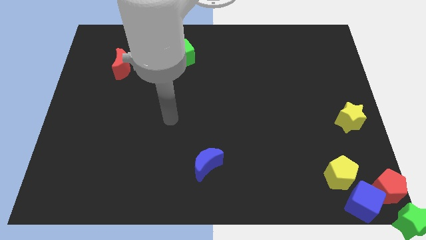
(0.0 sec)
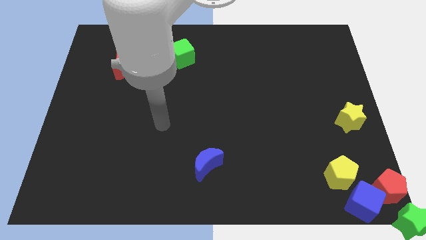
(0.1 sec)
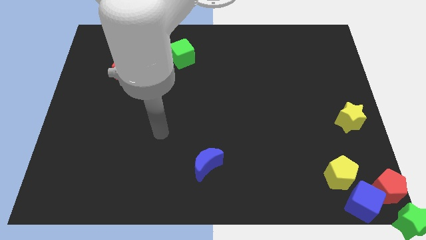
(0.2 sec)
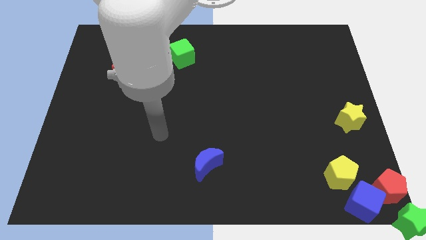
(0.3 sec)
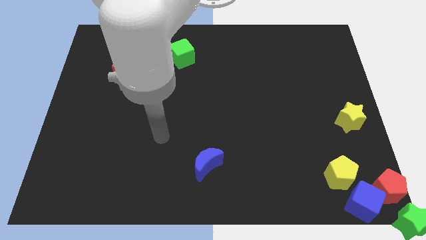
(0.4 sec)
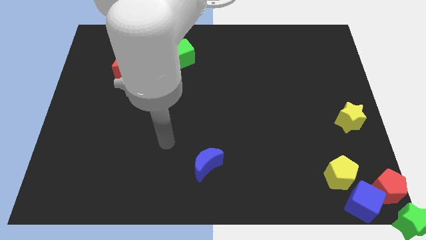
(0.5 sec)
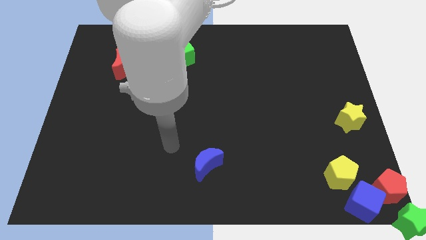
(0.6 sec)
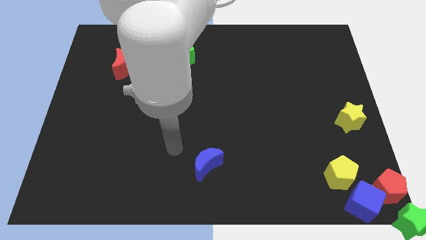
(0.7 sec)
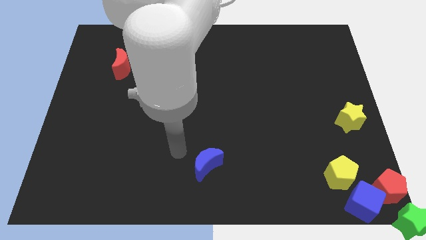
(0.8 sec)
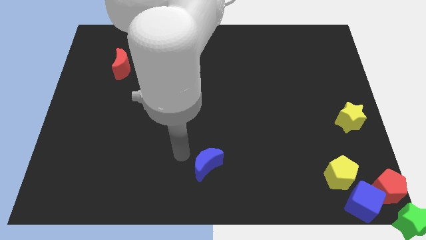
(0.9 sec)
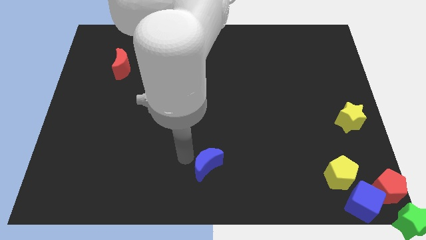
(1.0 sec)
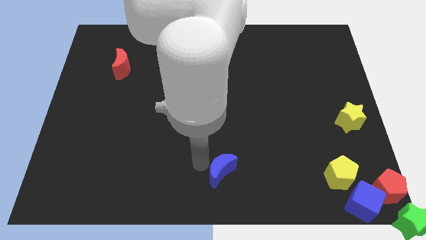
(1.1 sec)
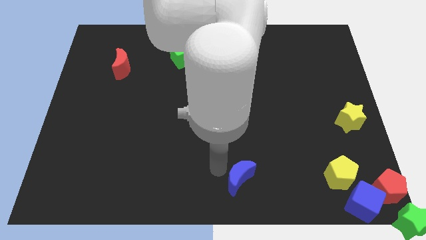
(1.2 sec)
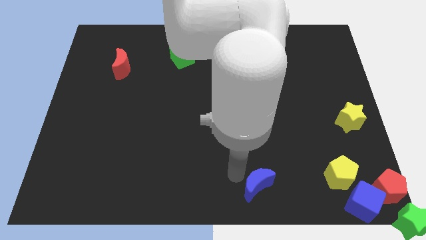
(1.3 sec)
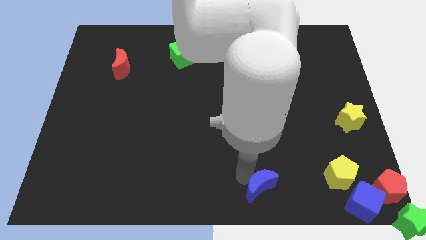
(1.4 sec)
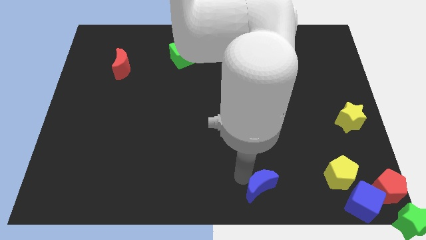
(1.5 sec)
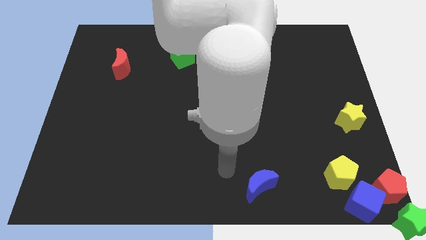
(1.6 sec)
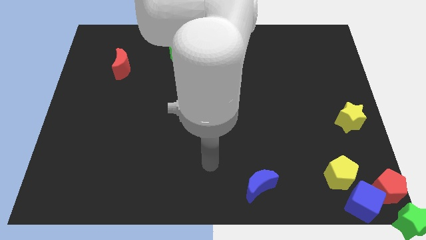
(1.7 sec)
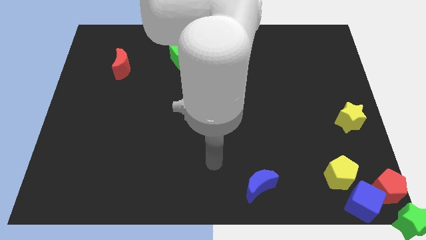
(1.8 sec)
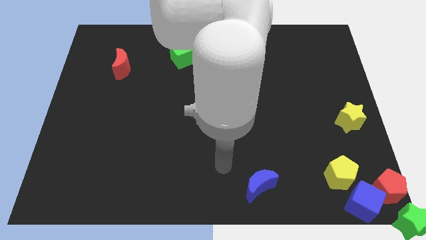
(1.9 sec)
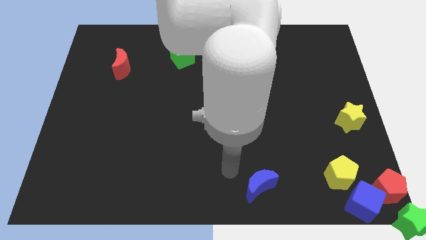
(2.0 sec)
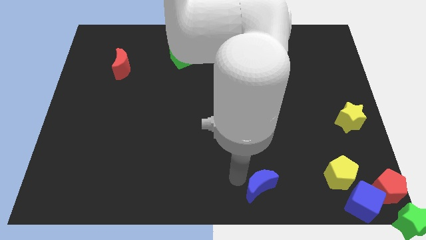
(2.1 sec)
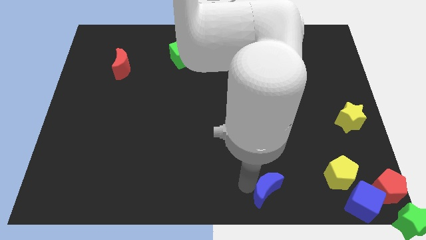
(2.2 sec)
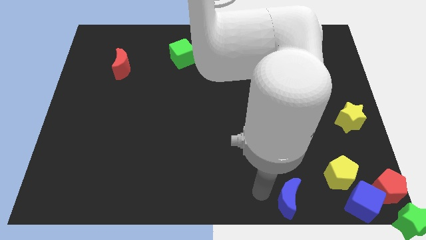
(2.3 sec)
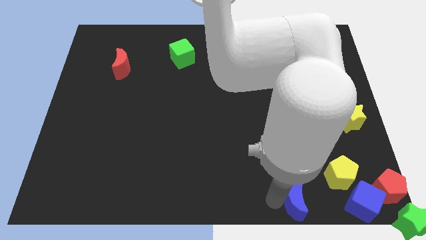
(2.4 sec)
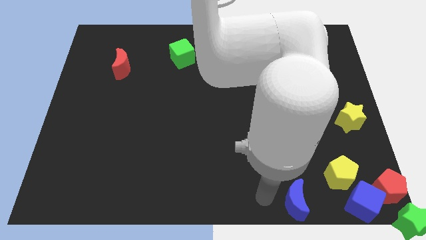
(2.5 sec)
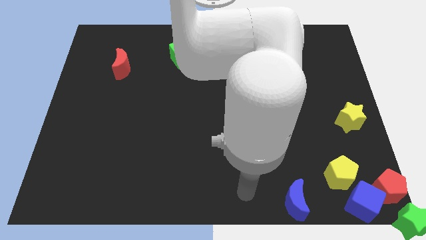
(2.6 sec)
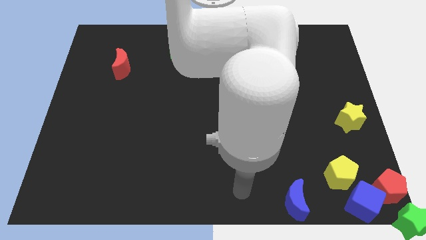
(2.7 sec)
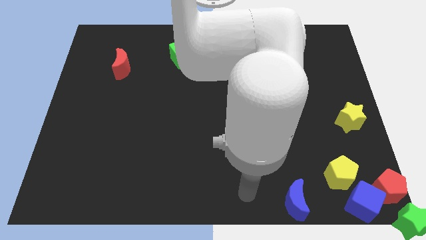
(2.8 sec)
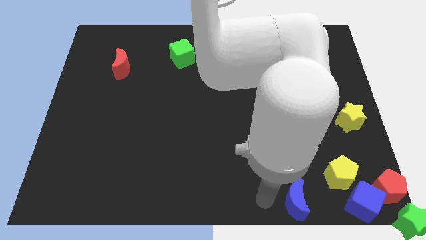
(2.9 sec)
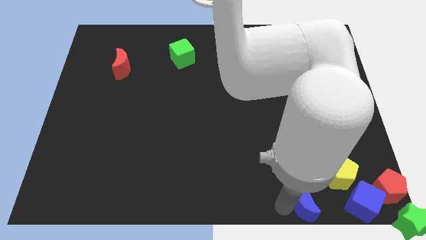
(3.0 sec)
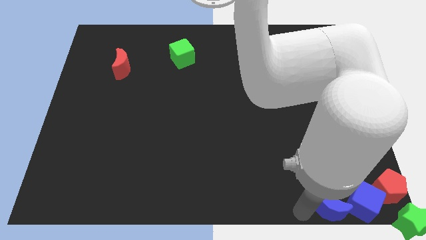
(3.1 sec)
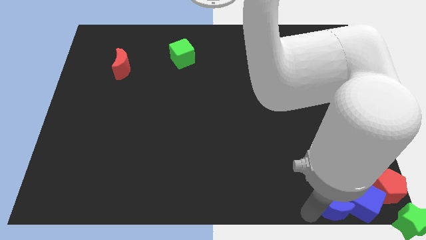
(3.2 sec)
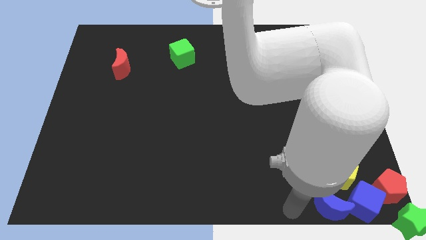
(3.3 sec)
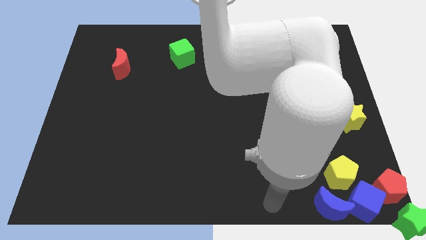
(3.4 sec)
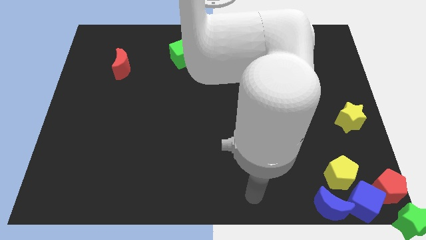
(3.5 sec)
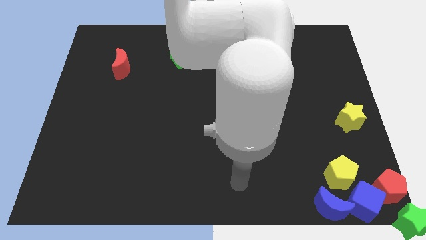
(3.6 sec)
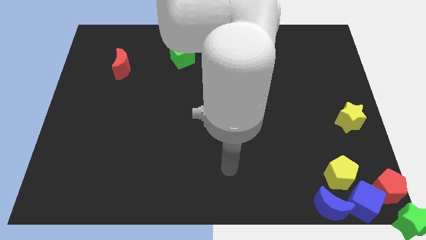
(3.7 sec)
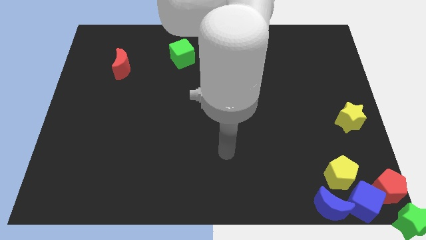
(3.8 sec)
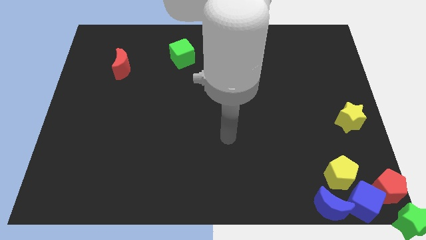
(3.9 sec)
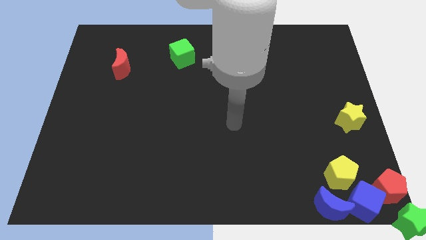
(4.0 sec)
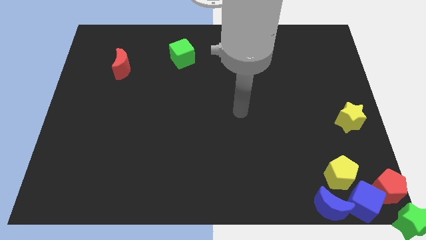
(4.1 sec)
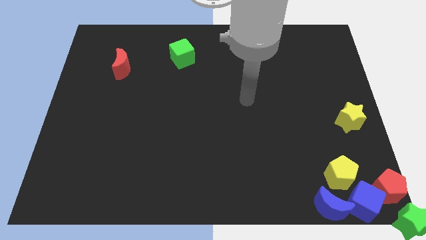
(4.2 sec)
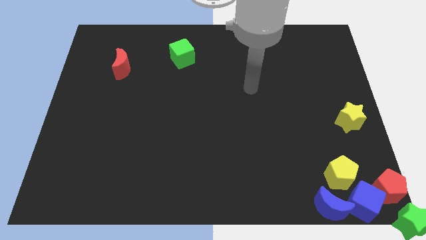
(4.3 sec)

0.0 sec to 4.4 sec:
place the blue crescent left to the blue cube

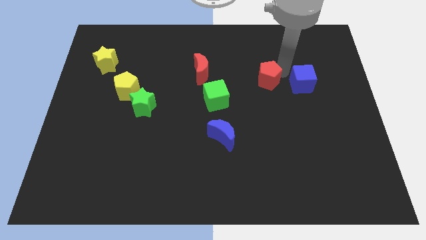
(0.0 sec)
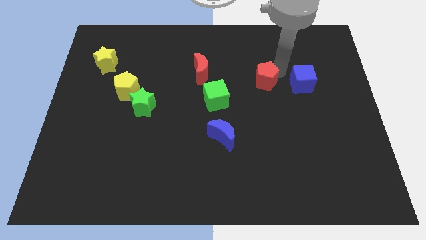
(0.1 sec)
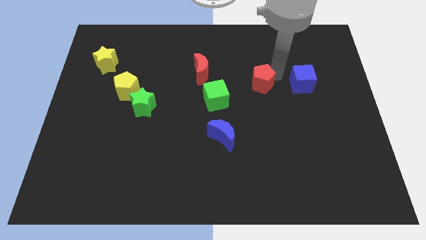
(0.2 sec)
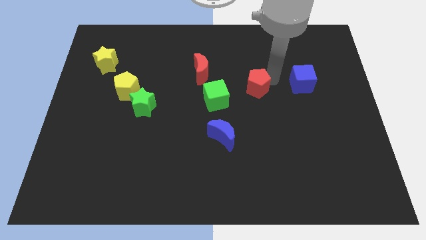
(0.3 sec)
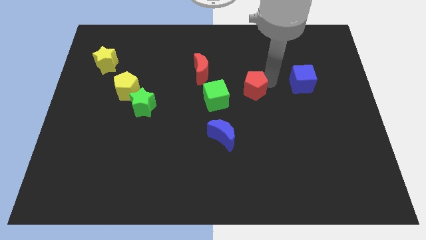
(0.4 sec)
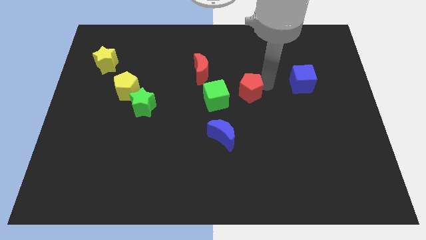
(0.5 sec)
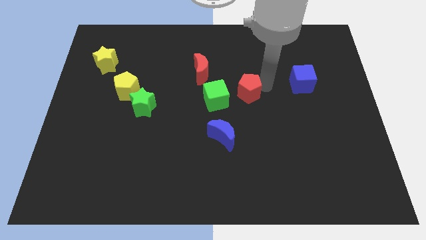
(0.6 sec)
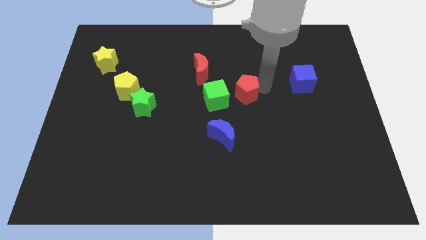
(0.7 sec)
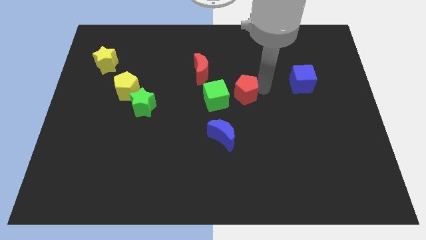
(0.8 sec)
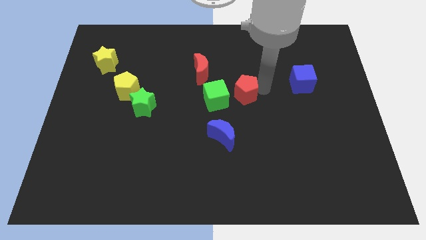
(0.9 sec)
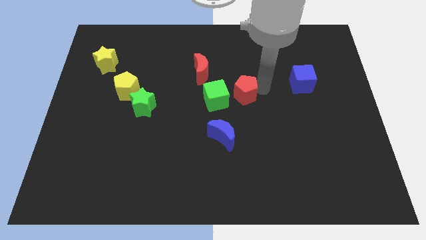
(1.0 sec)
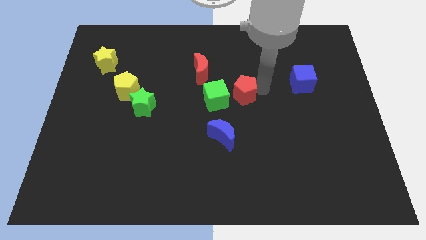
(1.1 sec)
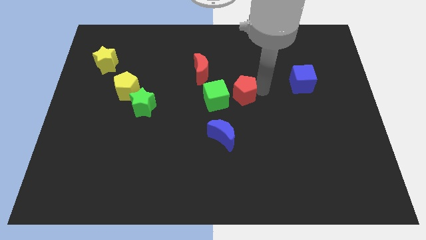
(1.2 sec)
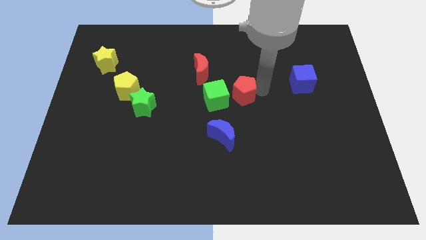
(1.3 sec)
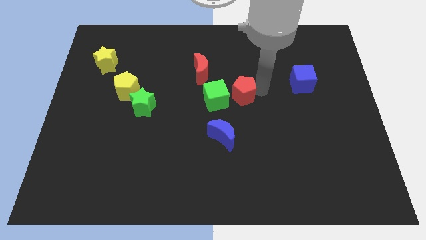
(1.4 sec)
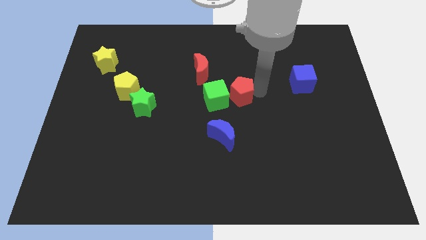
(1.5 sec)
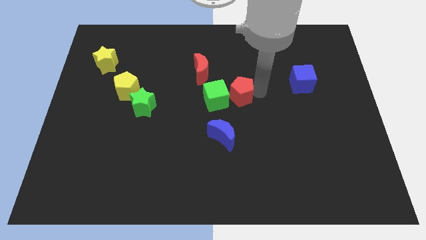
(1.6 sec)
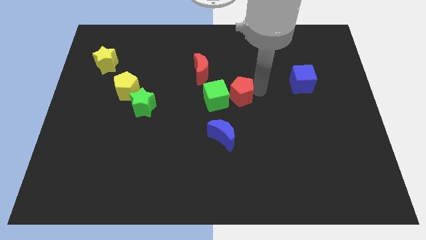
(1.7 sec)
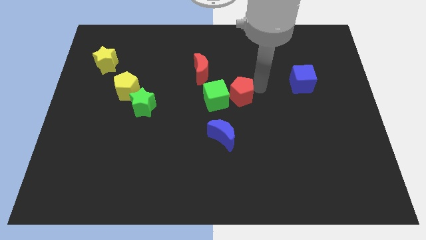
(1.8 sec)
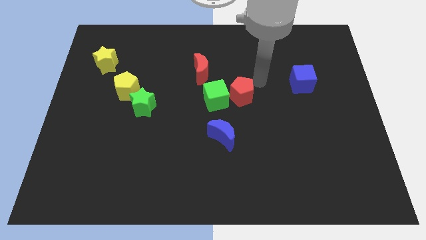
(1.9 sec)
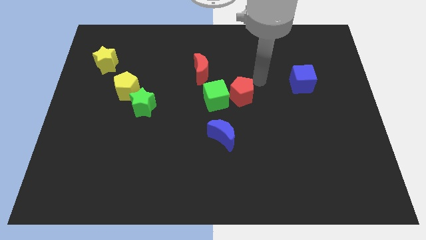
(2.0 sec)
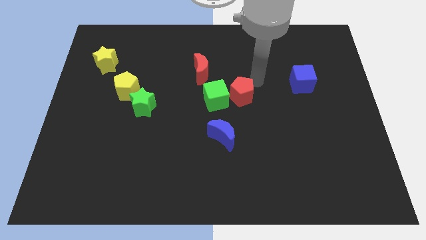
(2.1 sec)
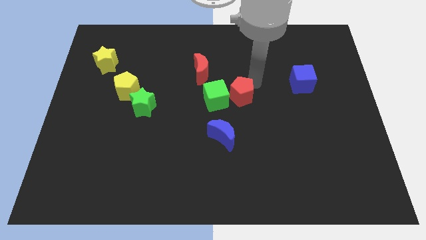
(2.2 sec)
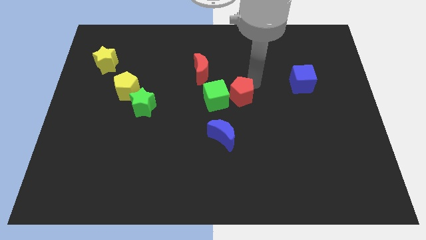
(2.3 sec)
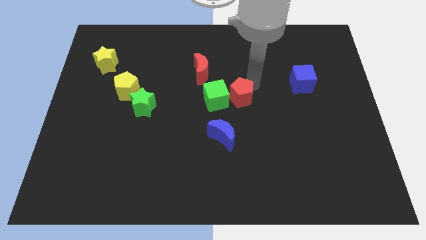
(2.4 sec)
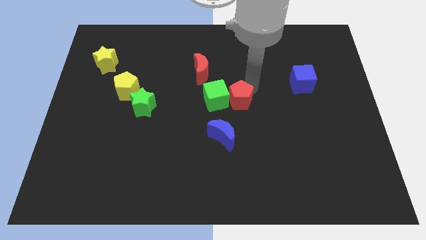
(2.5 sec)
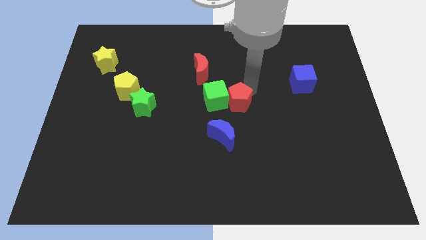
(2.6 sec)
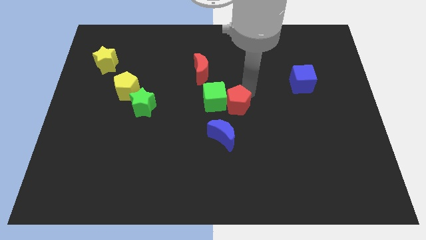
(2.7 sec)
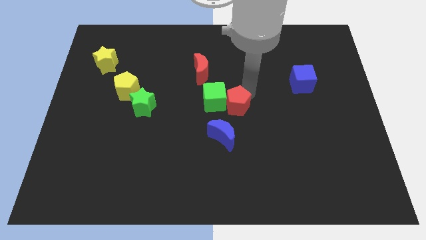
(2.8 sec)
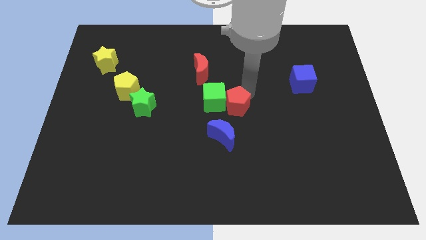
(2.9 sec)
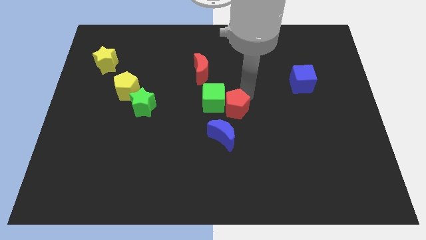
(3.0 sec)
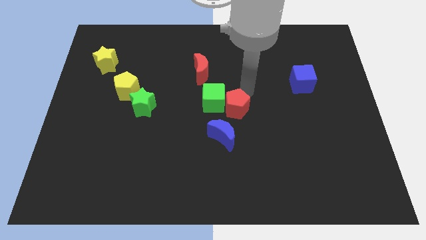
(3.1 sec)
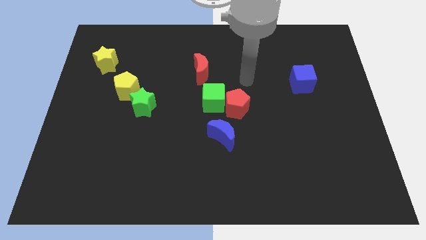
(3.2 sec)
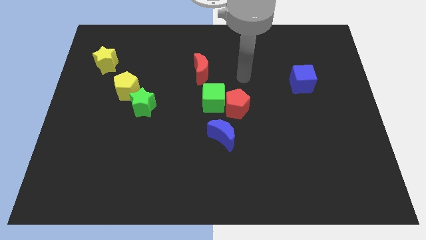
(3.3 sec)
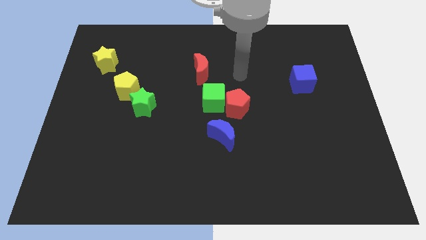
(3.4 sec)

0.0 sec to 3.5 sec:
push the red pentagon into the green cube

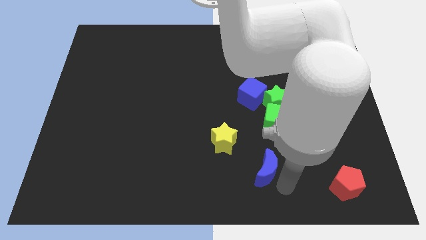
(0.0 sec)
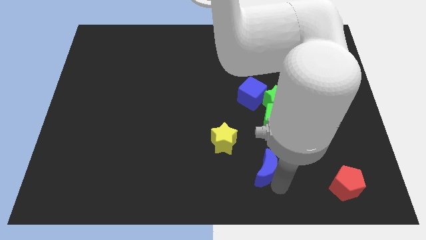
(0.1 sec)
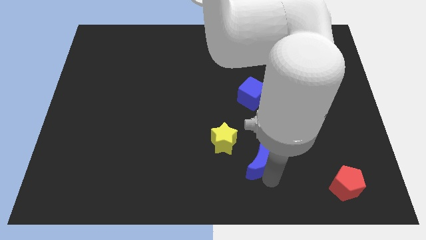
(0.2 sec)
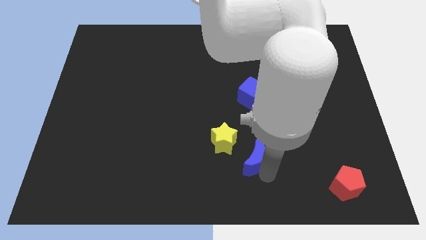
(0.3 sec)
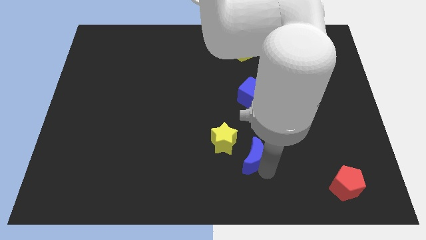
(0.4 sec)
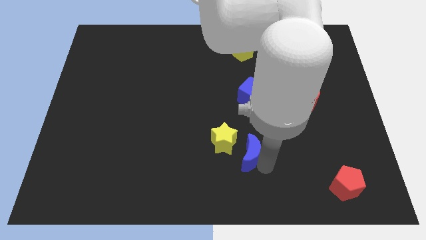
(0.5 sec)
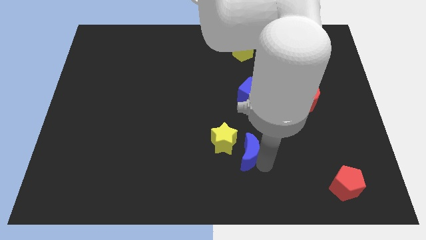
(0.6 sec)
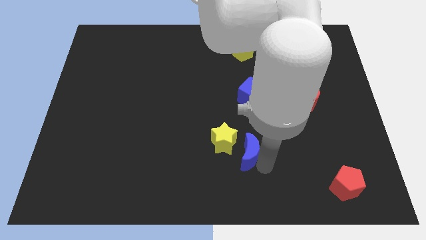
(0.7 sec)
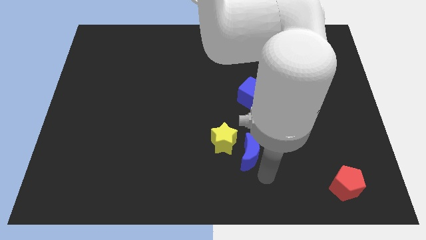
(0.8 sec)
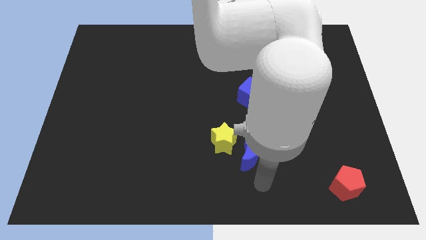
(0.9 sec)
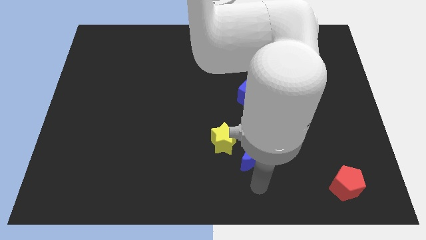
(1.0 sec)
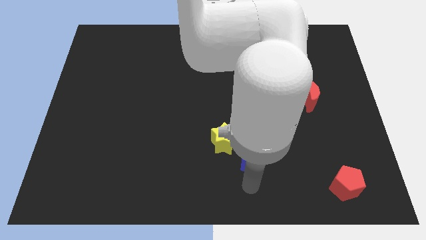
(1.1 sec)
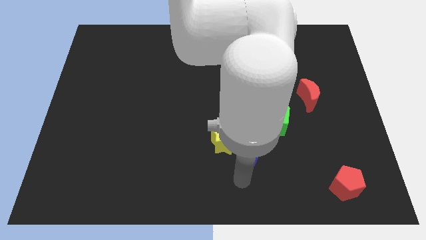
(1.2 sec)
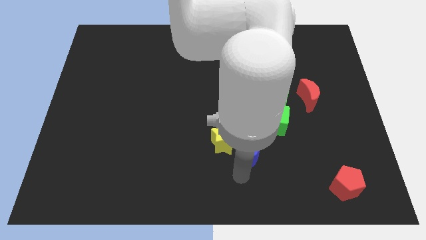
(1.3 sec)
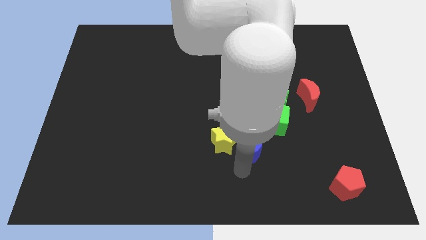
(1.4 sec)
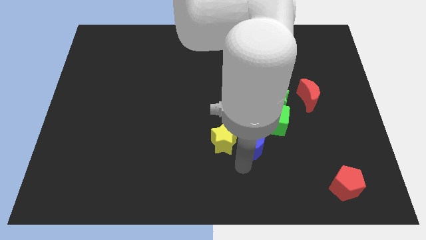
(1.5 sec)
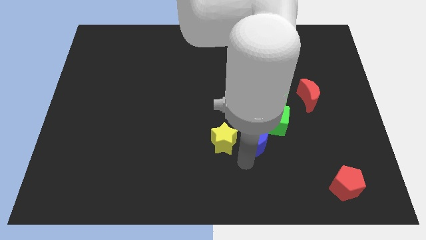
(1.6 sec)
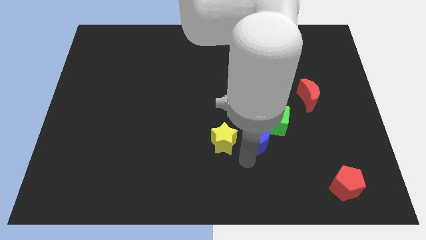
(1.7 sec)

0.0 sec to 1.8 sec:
push the blue crescent to the right of the yellow star
